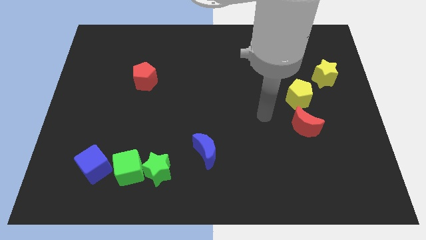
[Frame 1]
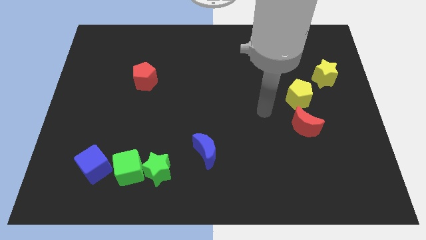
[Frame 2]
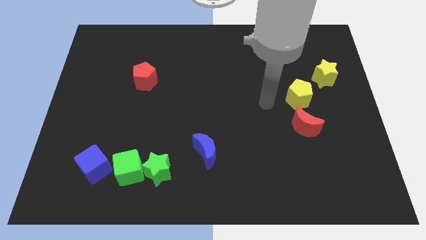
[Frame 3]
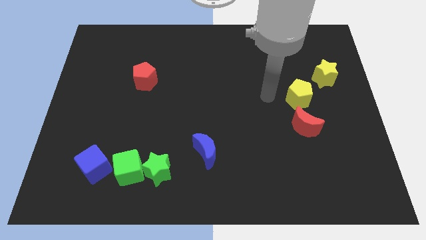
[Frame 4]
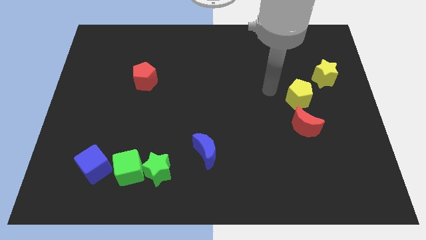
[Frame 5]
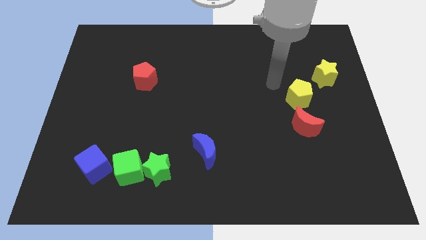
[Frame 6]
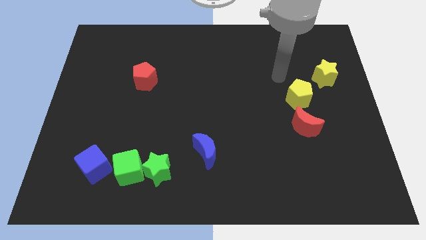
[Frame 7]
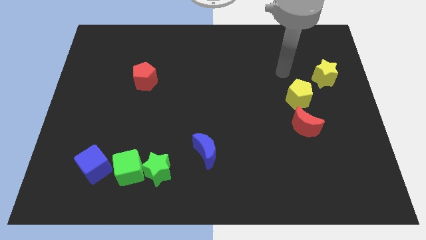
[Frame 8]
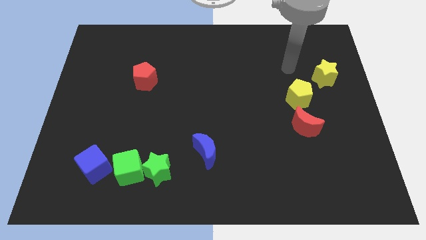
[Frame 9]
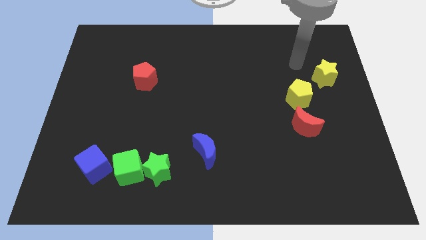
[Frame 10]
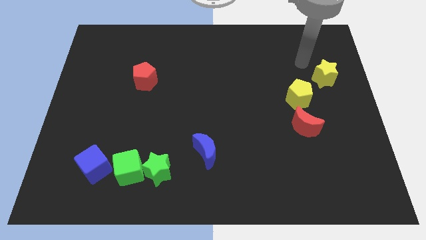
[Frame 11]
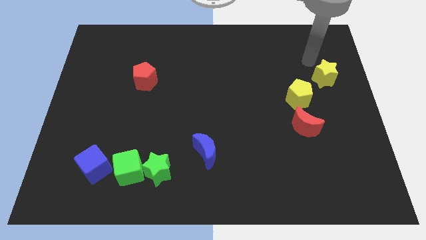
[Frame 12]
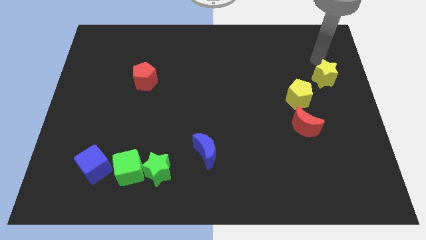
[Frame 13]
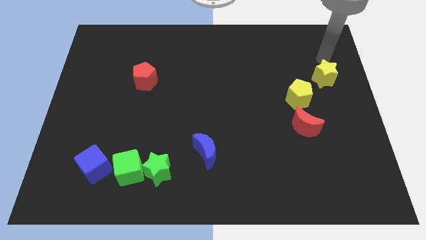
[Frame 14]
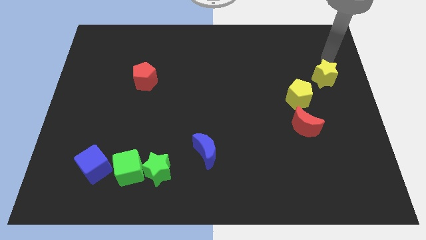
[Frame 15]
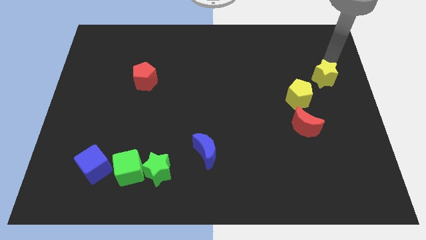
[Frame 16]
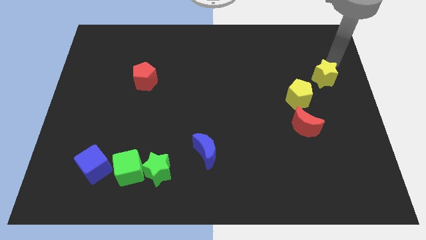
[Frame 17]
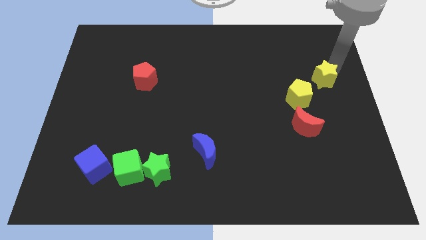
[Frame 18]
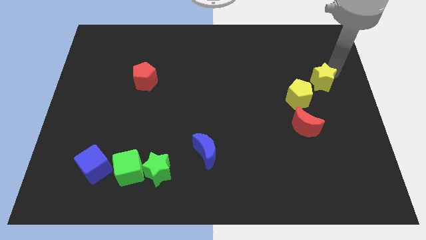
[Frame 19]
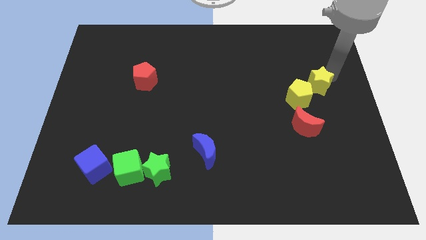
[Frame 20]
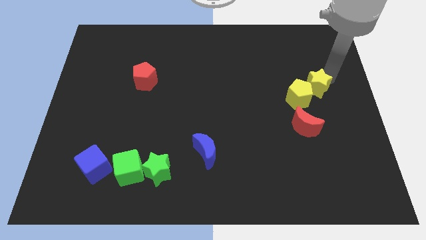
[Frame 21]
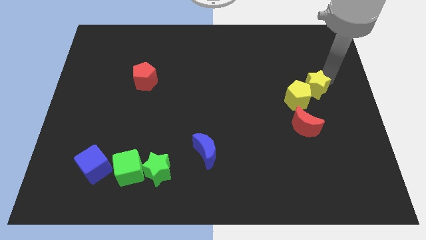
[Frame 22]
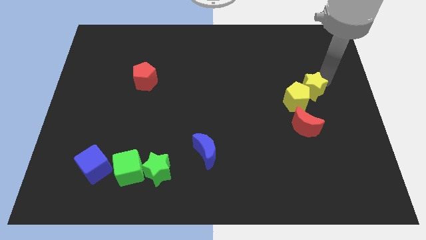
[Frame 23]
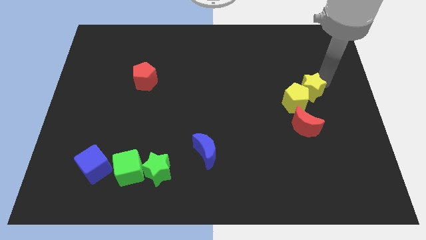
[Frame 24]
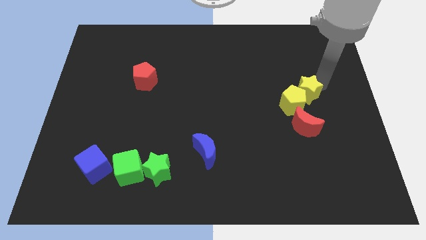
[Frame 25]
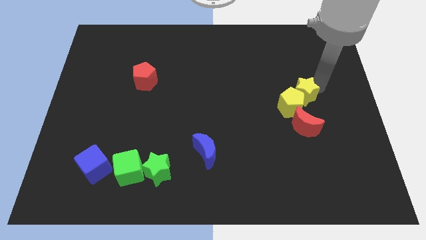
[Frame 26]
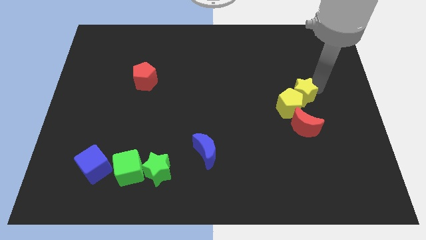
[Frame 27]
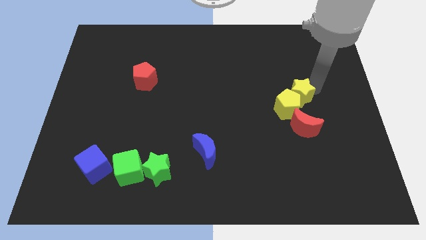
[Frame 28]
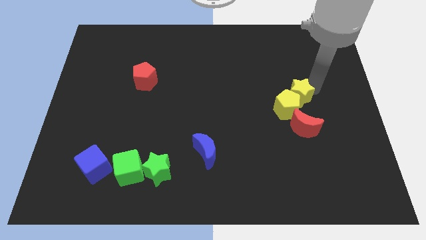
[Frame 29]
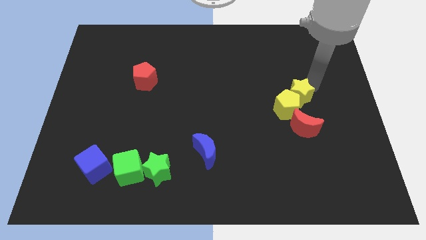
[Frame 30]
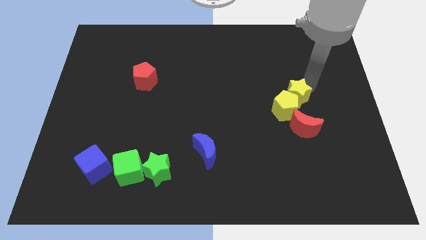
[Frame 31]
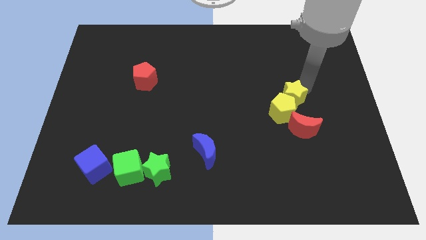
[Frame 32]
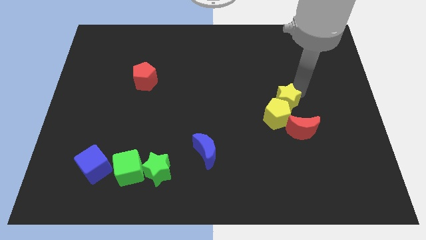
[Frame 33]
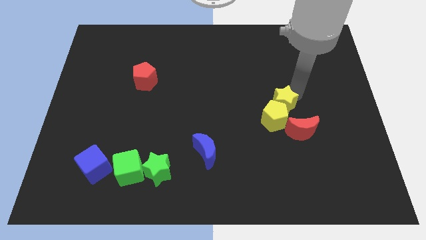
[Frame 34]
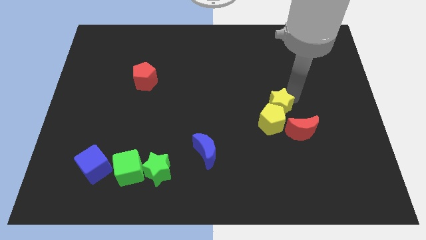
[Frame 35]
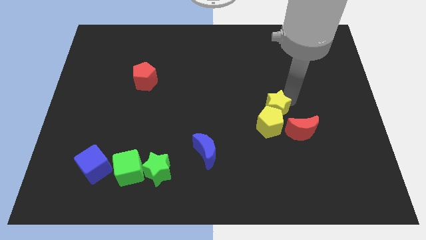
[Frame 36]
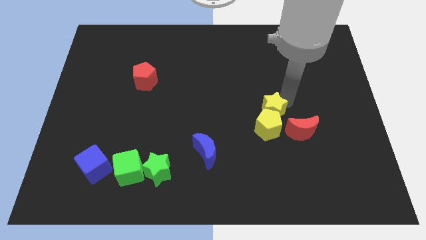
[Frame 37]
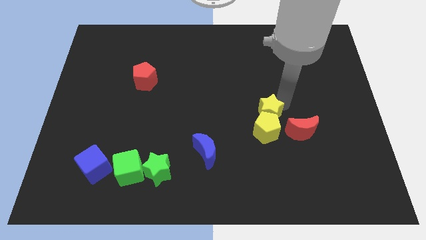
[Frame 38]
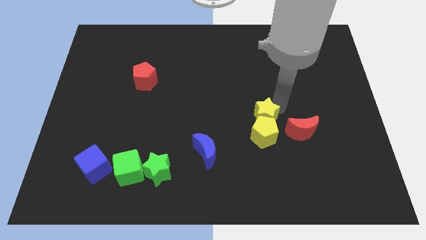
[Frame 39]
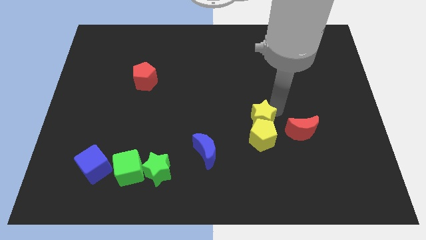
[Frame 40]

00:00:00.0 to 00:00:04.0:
move the yellow star and yellow pentagon towards bottom side

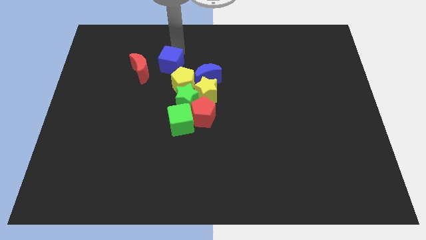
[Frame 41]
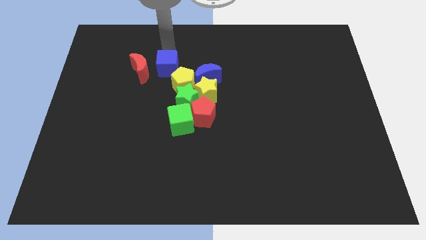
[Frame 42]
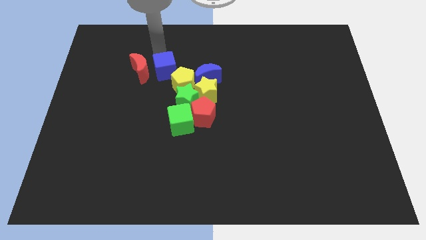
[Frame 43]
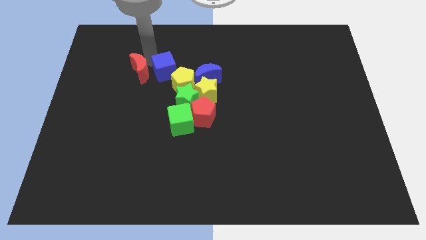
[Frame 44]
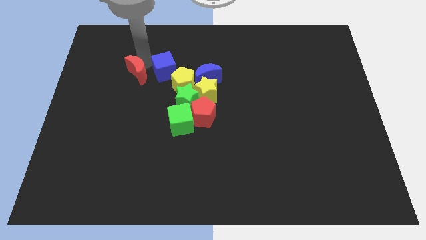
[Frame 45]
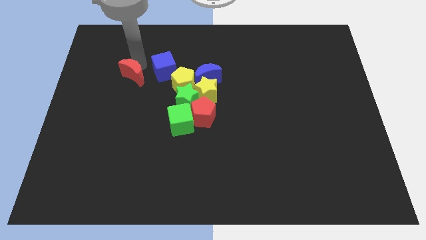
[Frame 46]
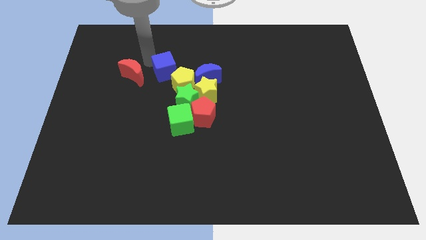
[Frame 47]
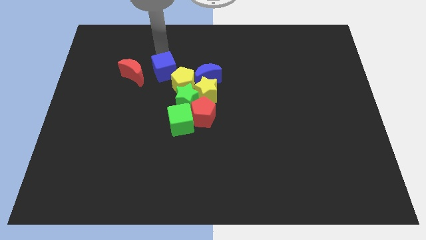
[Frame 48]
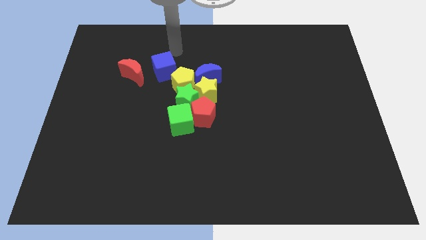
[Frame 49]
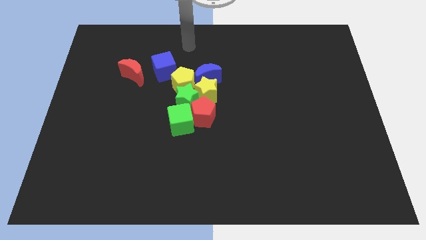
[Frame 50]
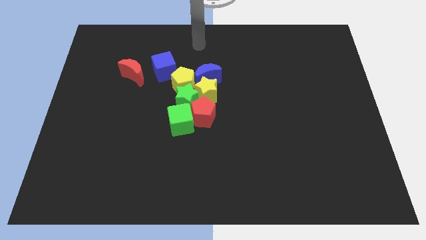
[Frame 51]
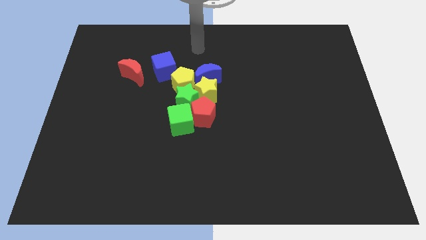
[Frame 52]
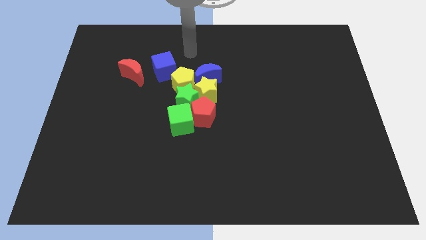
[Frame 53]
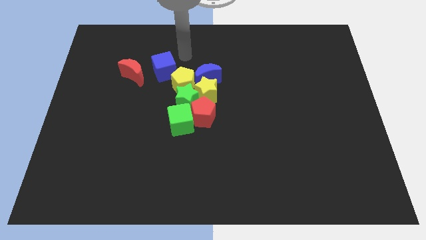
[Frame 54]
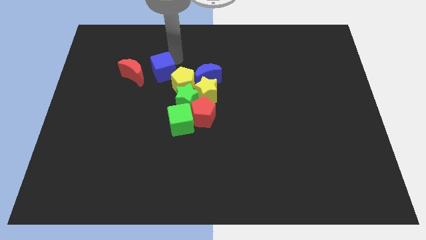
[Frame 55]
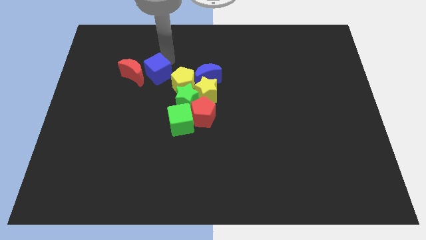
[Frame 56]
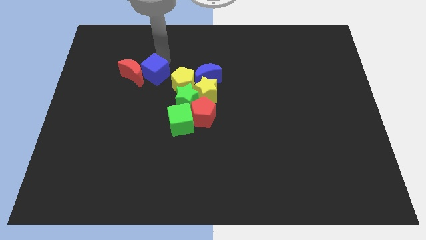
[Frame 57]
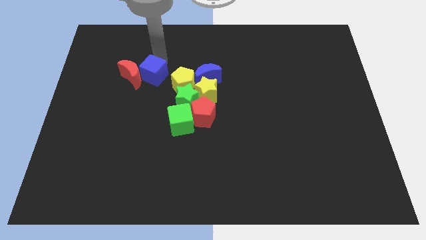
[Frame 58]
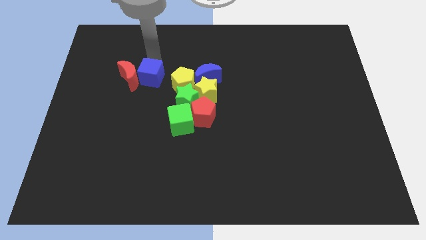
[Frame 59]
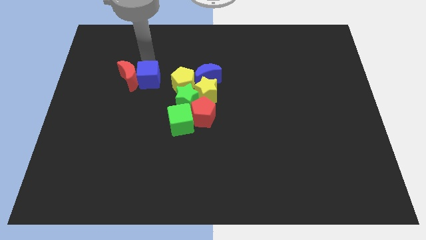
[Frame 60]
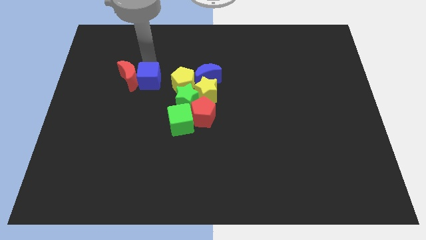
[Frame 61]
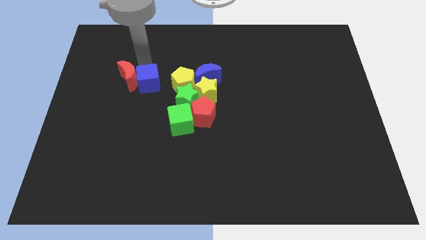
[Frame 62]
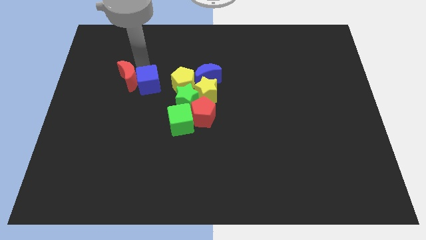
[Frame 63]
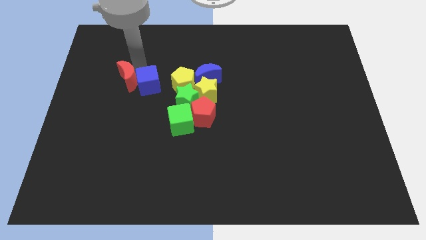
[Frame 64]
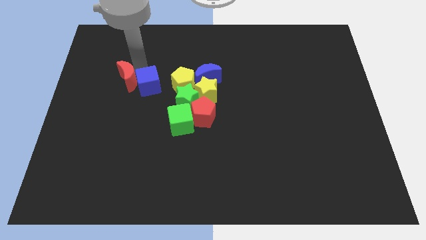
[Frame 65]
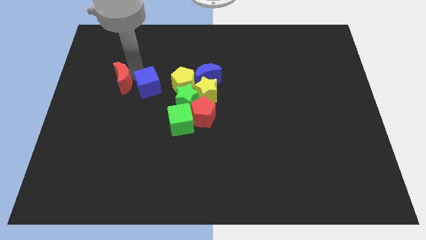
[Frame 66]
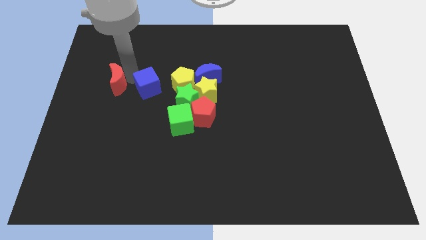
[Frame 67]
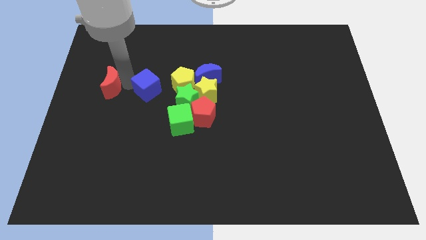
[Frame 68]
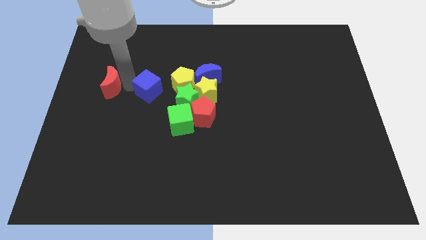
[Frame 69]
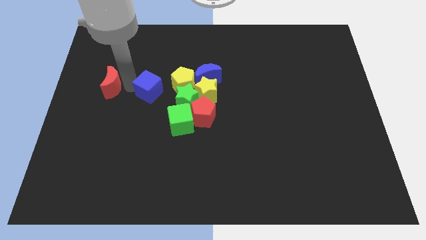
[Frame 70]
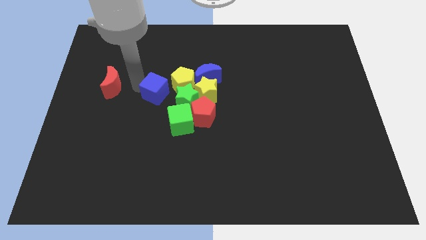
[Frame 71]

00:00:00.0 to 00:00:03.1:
move blue cube towards green star

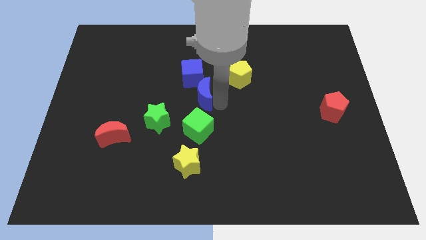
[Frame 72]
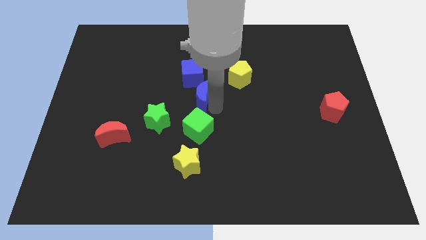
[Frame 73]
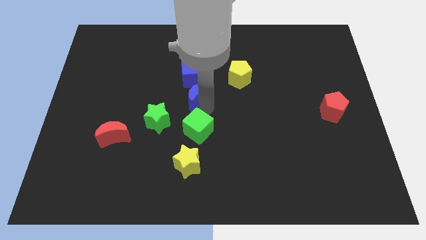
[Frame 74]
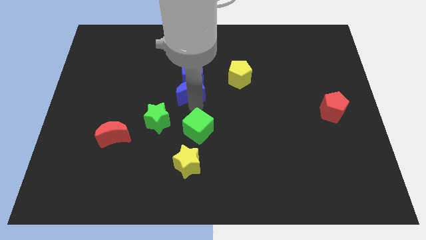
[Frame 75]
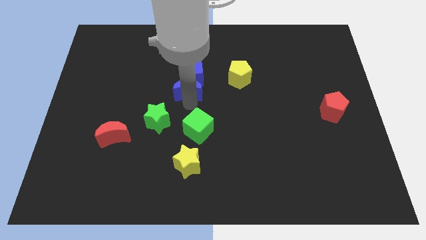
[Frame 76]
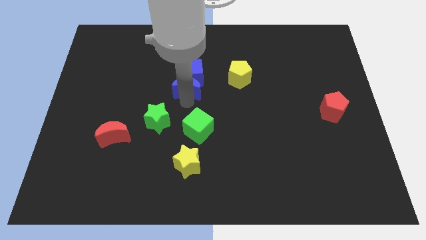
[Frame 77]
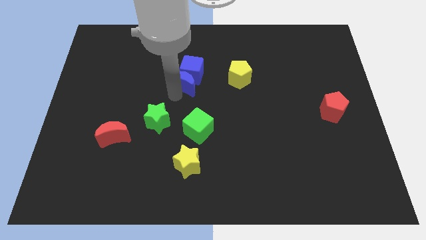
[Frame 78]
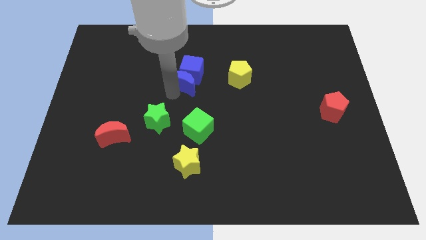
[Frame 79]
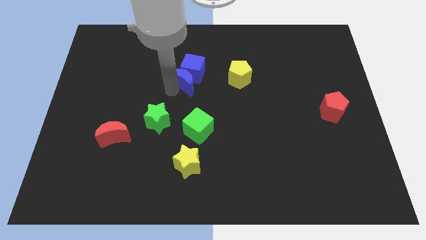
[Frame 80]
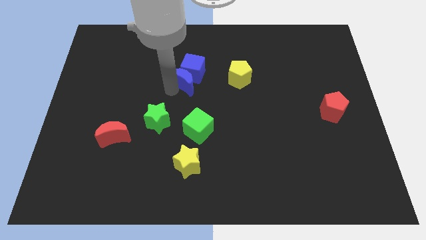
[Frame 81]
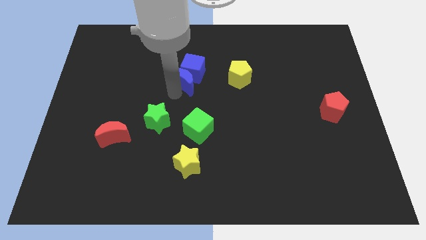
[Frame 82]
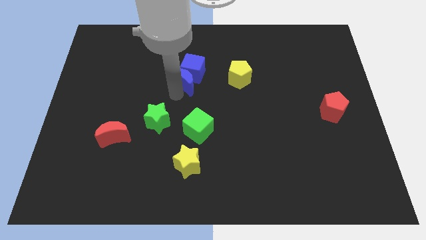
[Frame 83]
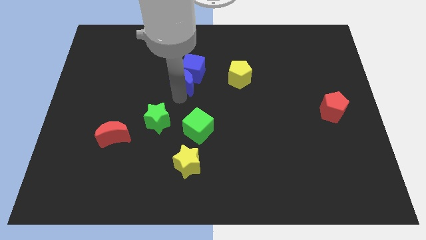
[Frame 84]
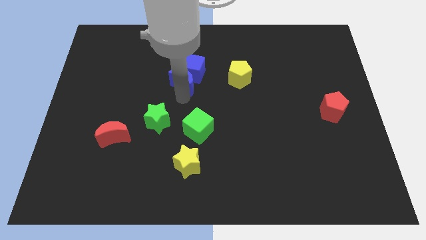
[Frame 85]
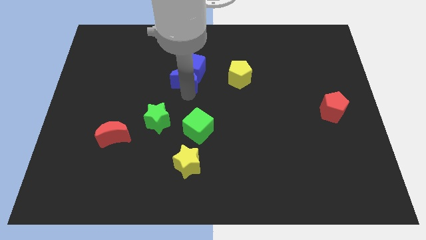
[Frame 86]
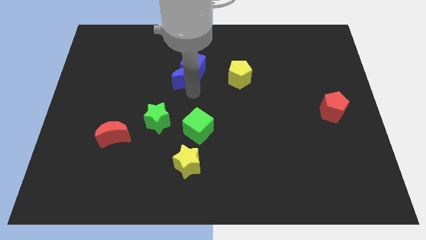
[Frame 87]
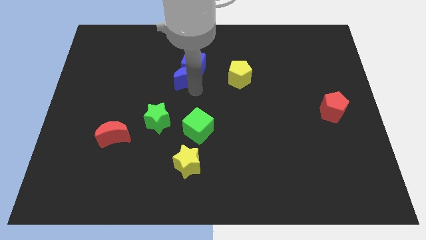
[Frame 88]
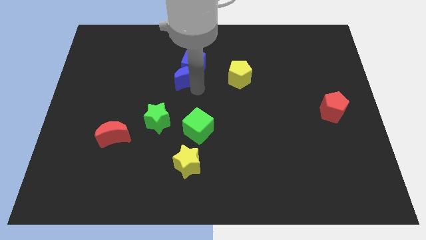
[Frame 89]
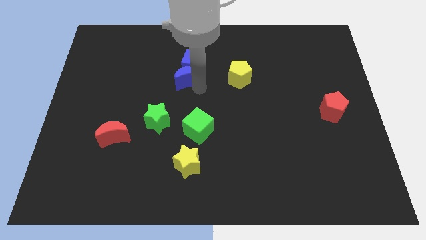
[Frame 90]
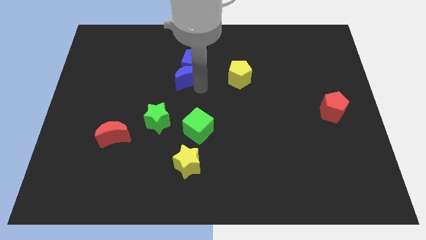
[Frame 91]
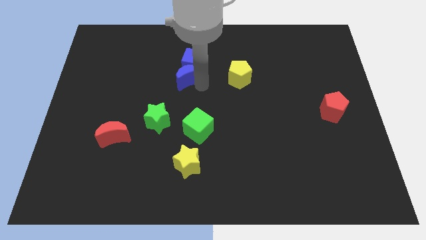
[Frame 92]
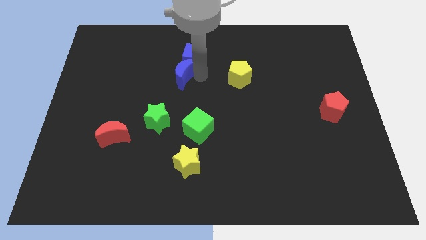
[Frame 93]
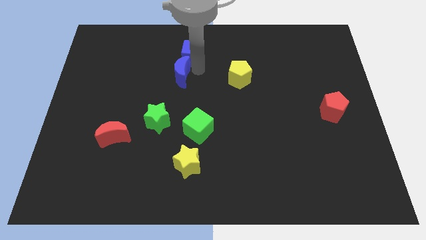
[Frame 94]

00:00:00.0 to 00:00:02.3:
push the group of blue blocks to the top
